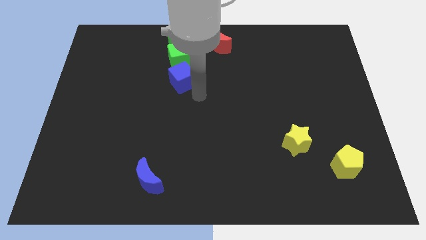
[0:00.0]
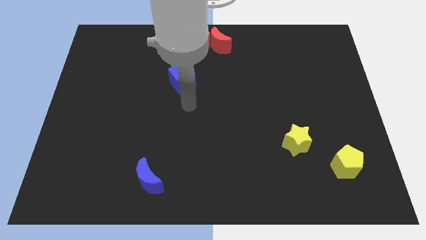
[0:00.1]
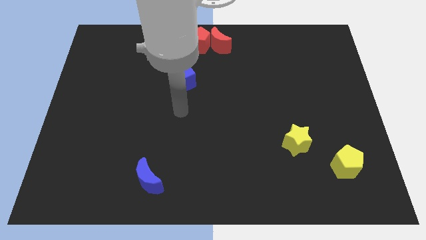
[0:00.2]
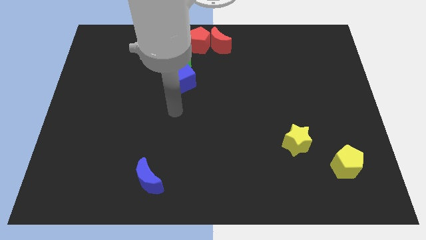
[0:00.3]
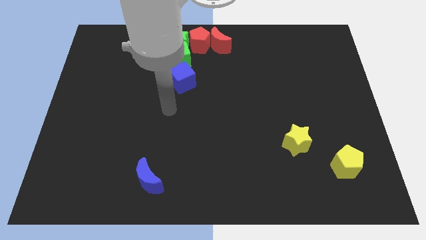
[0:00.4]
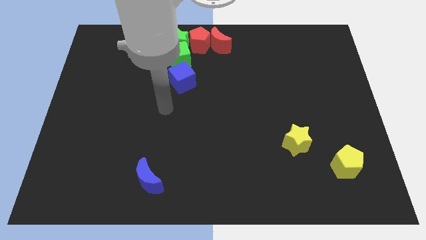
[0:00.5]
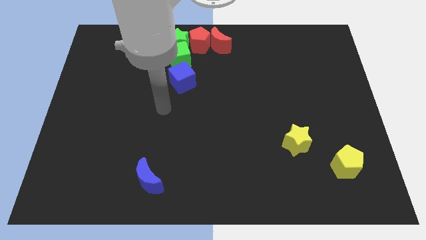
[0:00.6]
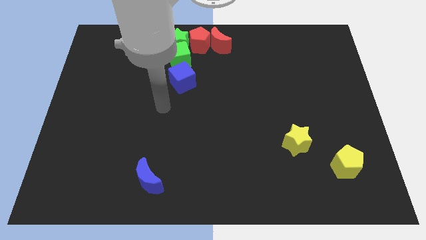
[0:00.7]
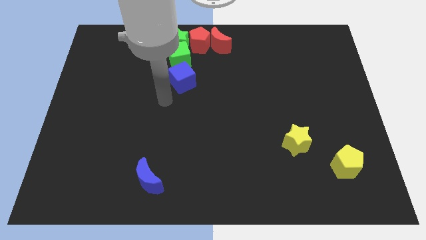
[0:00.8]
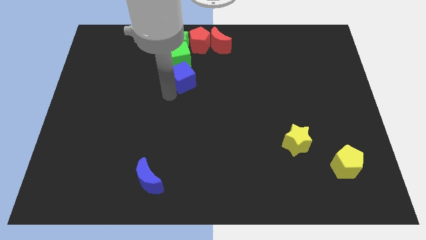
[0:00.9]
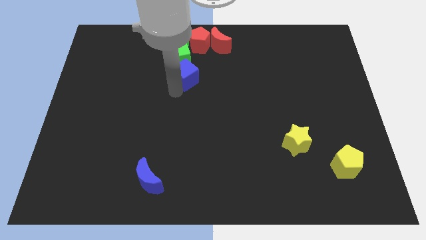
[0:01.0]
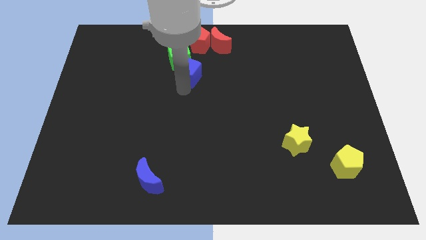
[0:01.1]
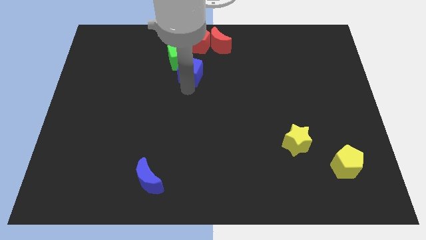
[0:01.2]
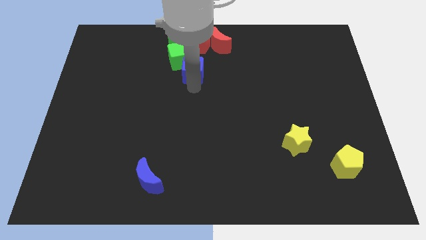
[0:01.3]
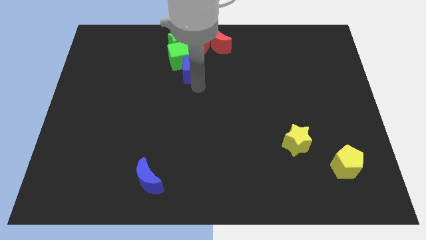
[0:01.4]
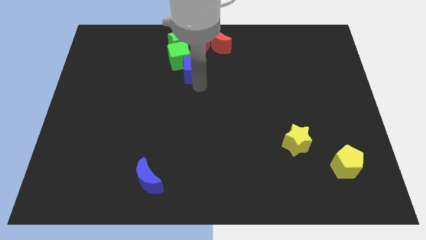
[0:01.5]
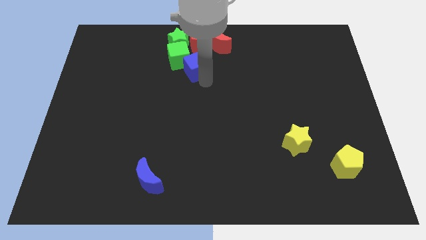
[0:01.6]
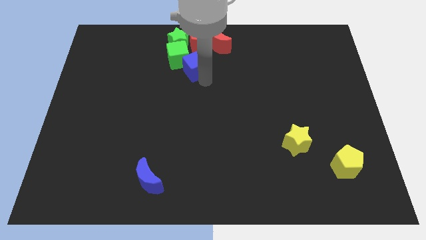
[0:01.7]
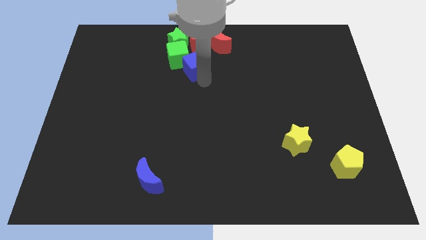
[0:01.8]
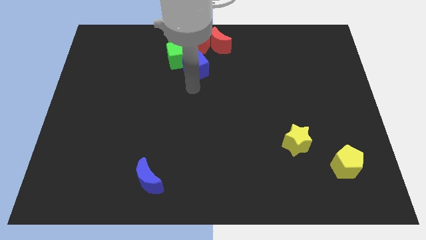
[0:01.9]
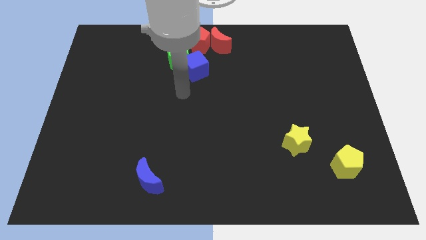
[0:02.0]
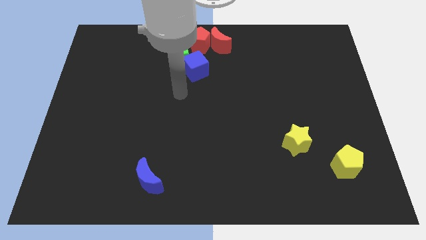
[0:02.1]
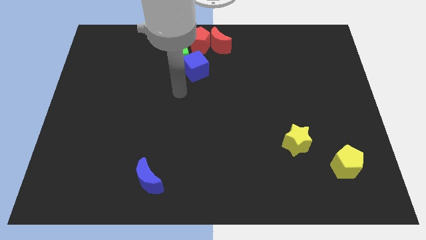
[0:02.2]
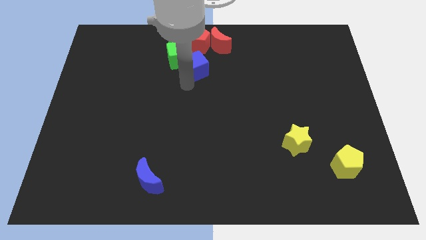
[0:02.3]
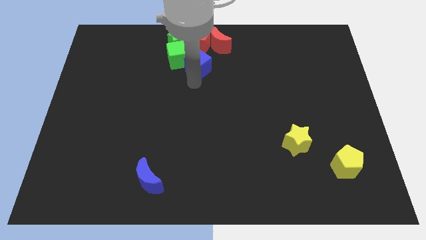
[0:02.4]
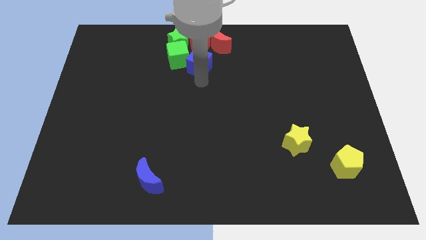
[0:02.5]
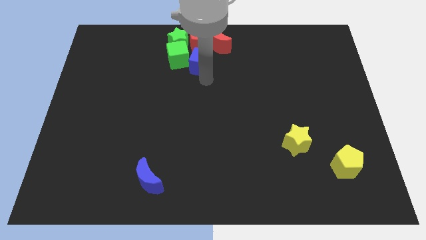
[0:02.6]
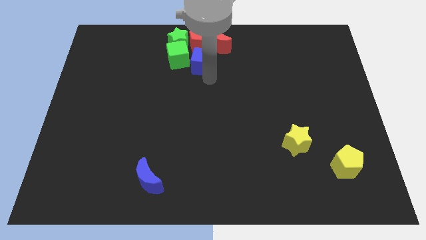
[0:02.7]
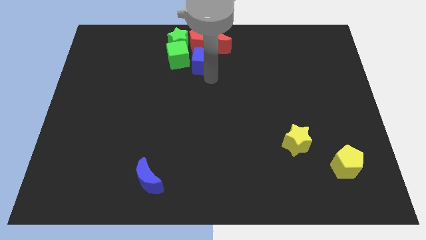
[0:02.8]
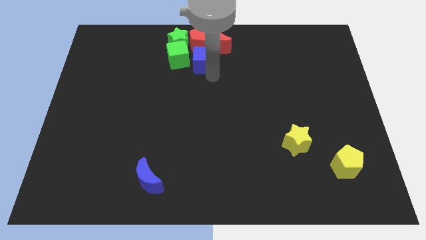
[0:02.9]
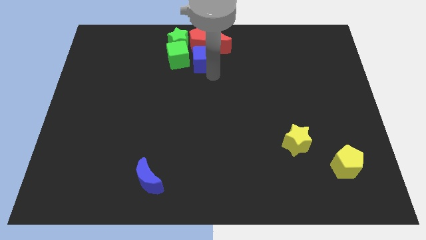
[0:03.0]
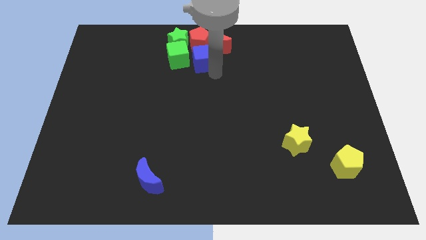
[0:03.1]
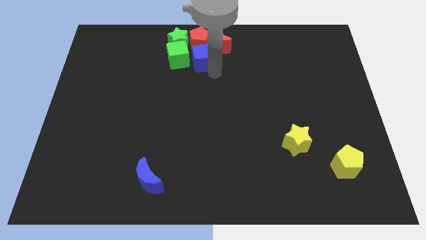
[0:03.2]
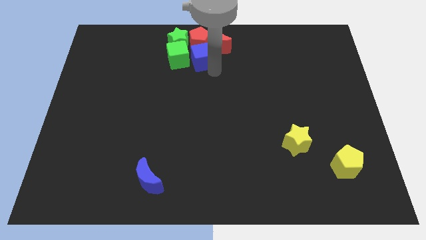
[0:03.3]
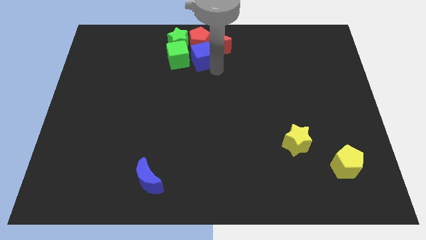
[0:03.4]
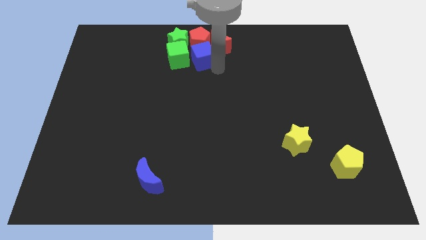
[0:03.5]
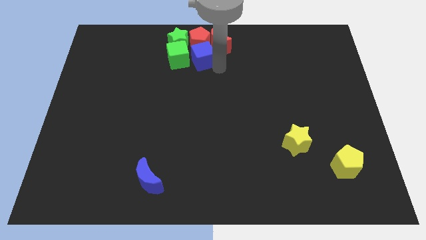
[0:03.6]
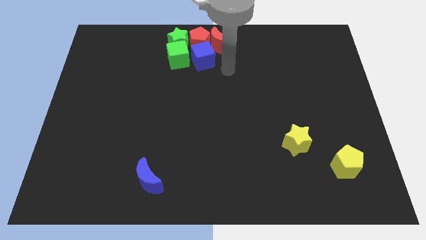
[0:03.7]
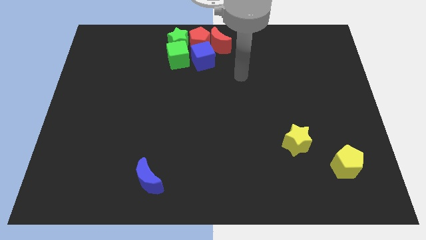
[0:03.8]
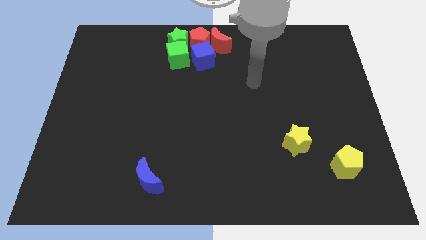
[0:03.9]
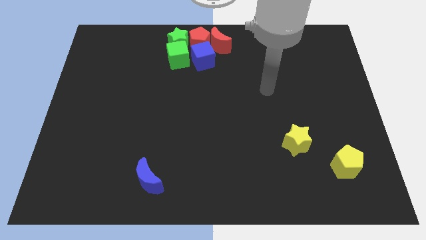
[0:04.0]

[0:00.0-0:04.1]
slide blue cube below red pentagon

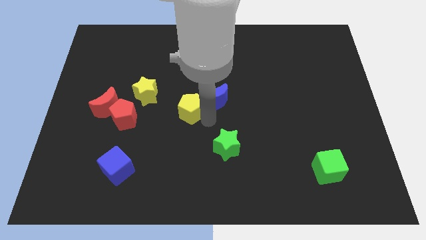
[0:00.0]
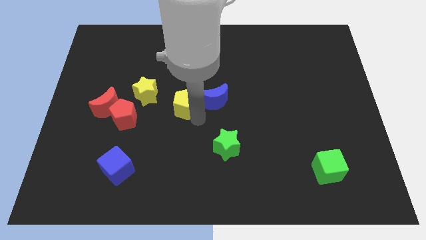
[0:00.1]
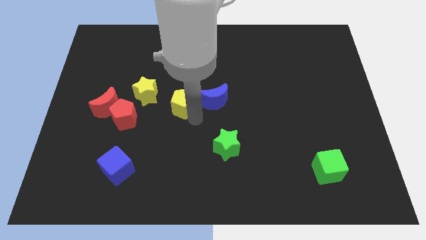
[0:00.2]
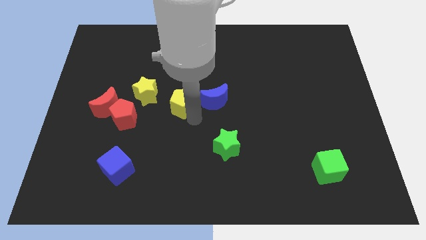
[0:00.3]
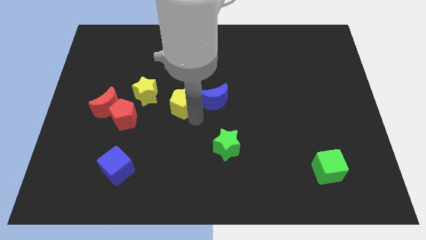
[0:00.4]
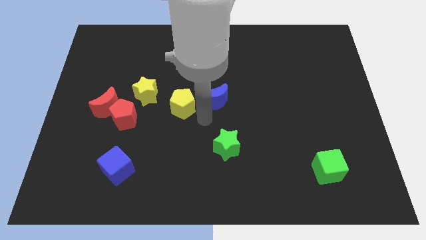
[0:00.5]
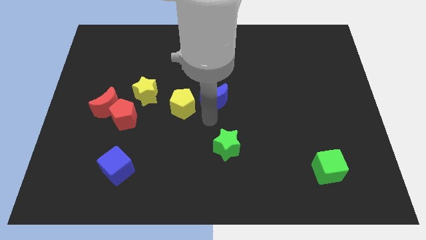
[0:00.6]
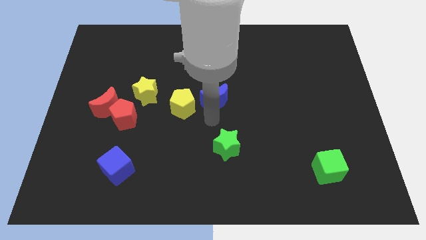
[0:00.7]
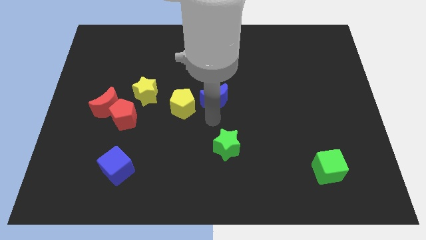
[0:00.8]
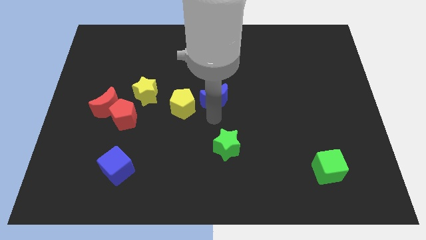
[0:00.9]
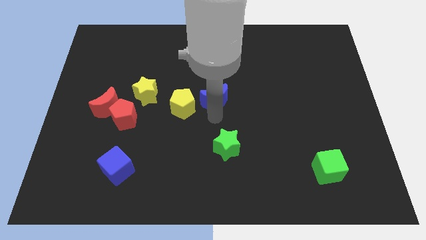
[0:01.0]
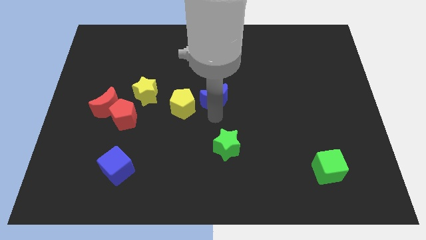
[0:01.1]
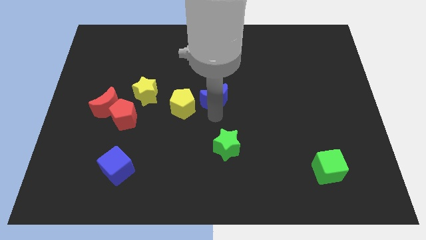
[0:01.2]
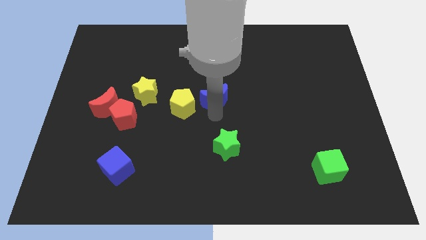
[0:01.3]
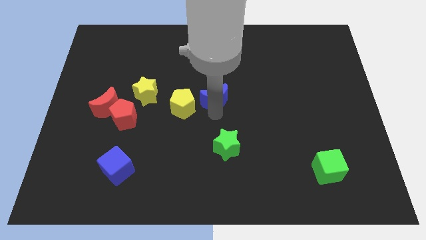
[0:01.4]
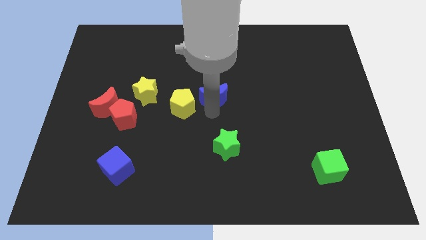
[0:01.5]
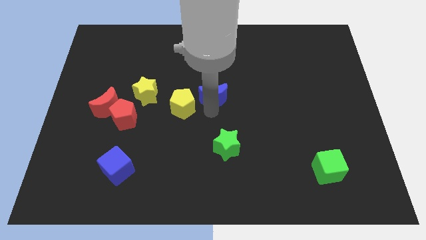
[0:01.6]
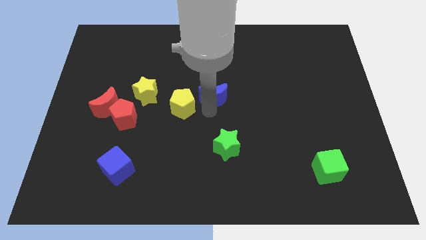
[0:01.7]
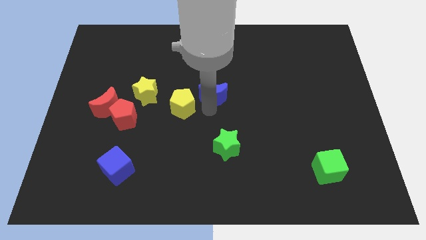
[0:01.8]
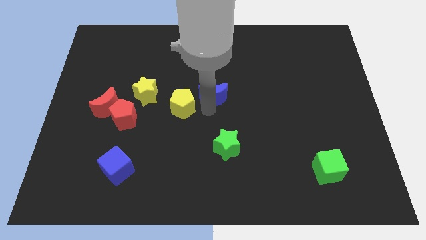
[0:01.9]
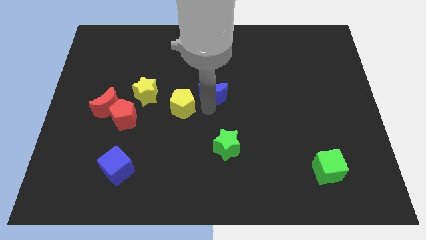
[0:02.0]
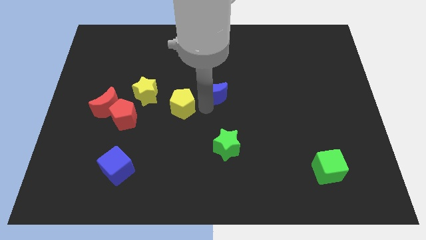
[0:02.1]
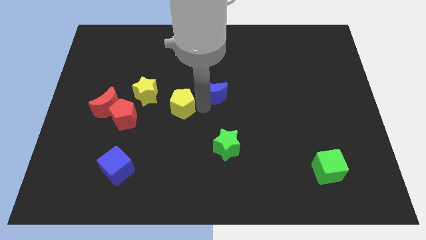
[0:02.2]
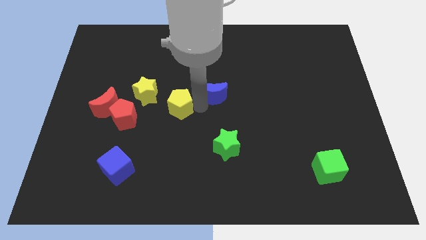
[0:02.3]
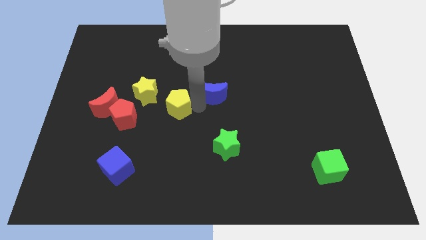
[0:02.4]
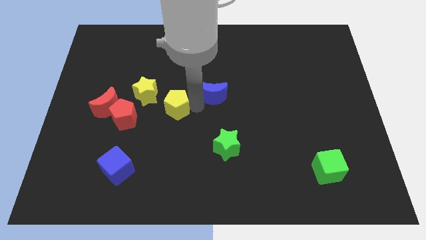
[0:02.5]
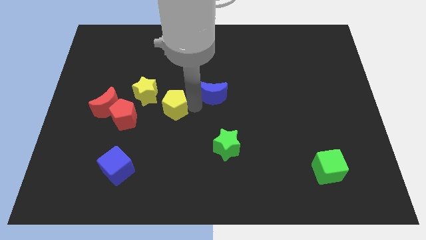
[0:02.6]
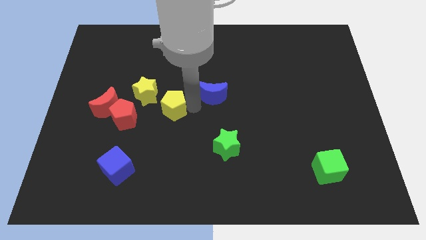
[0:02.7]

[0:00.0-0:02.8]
separate yellow pentagon and blue moon

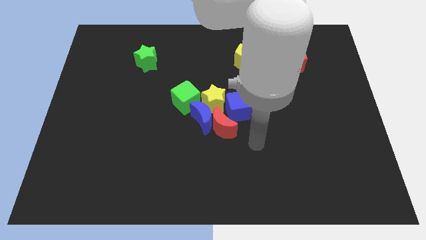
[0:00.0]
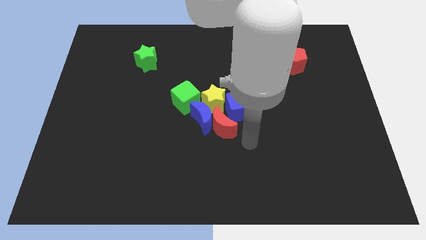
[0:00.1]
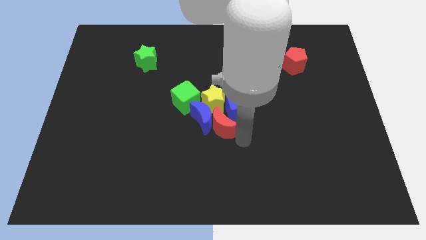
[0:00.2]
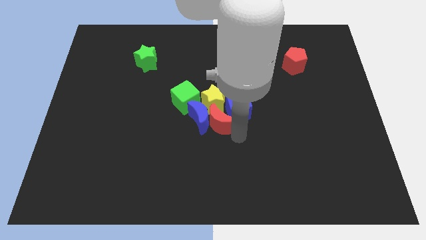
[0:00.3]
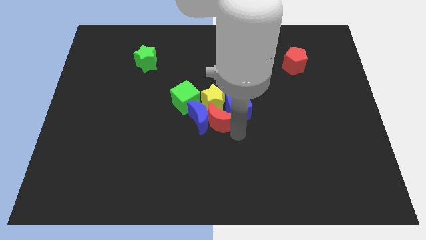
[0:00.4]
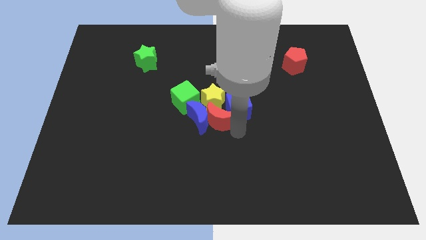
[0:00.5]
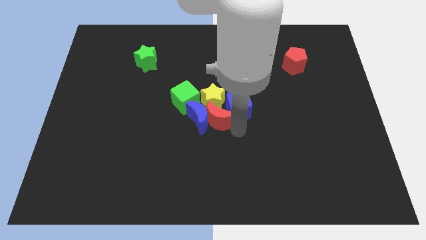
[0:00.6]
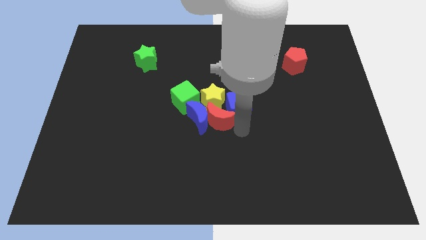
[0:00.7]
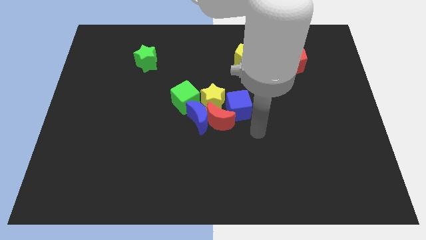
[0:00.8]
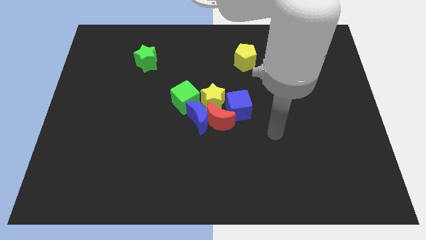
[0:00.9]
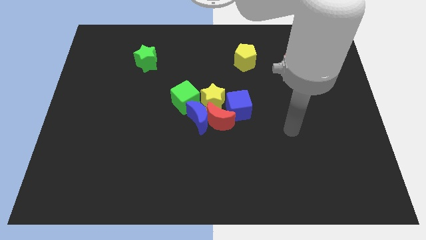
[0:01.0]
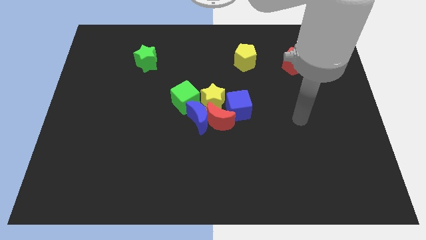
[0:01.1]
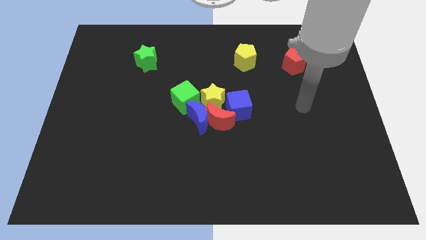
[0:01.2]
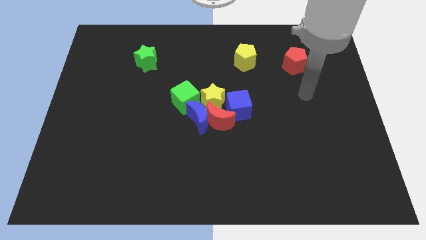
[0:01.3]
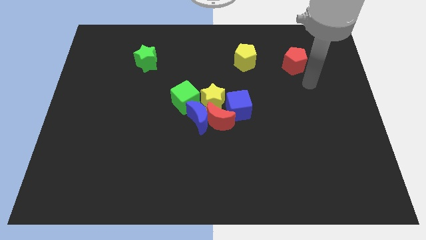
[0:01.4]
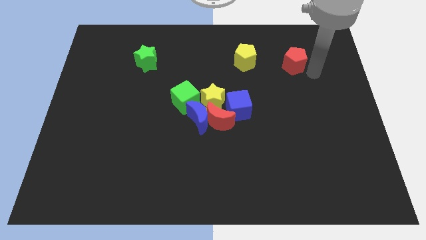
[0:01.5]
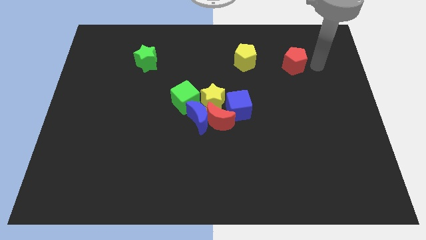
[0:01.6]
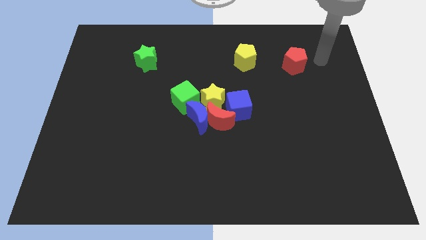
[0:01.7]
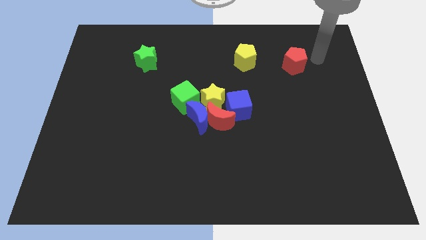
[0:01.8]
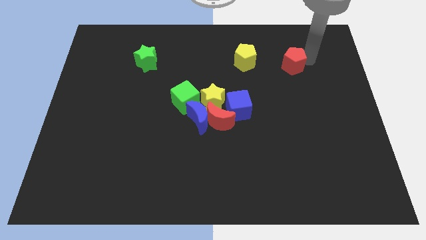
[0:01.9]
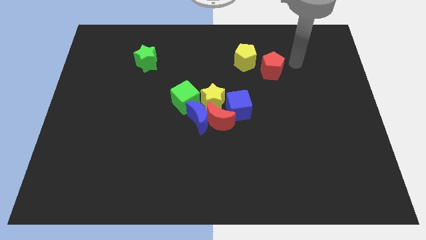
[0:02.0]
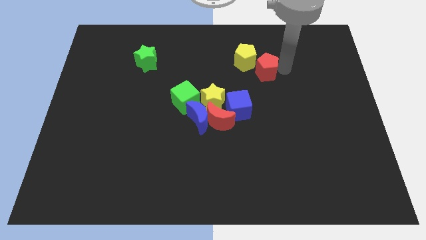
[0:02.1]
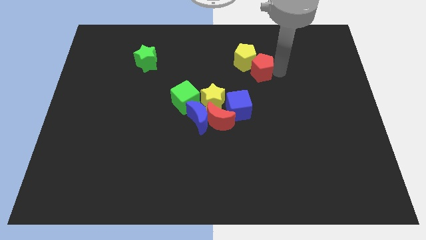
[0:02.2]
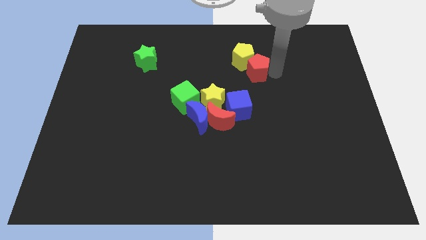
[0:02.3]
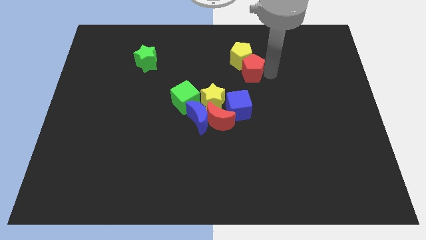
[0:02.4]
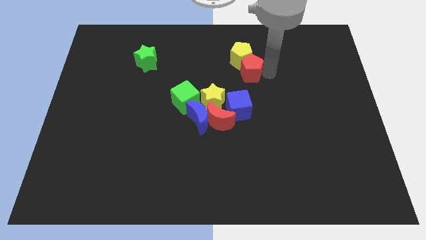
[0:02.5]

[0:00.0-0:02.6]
move the red moon into the blocks
